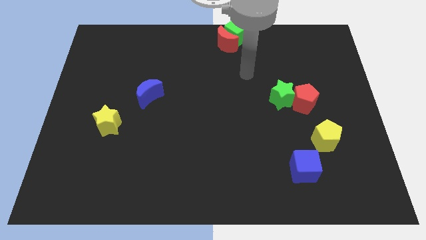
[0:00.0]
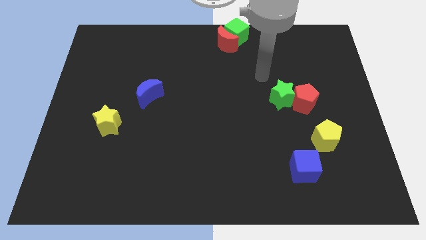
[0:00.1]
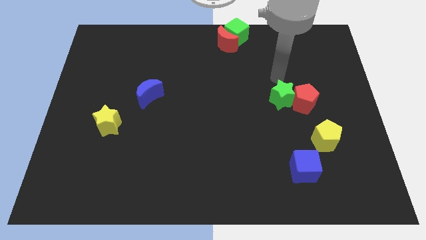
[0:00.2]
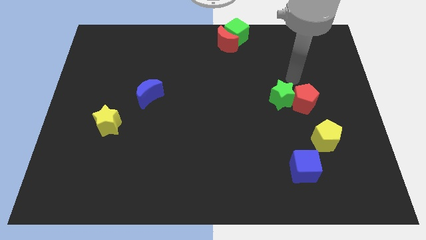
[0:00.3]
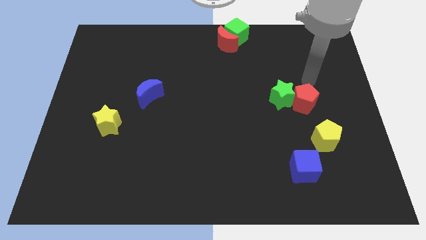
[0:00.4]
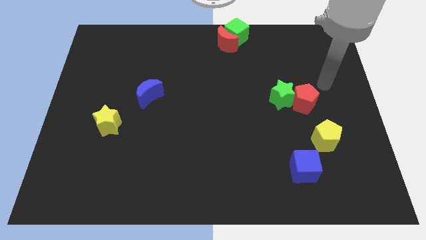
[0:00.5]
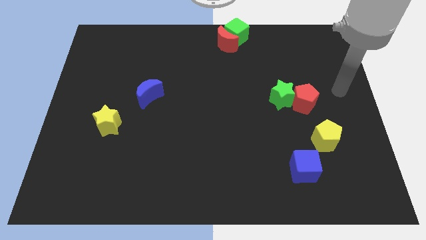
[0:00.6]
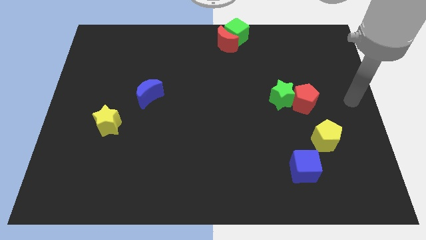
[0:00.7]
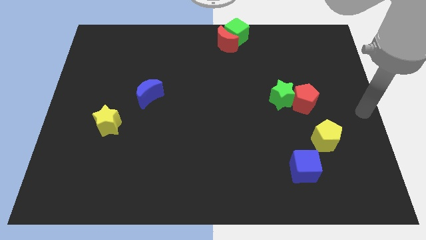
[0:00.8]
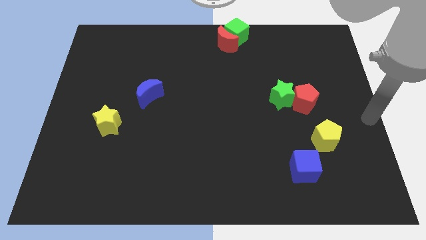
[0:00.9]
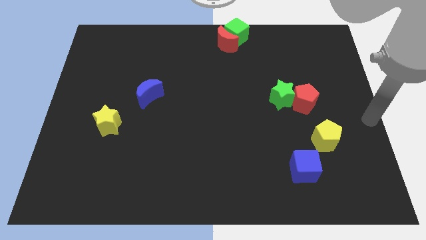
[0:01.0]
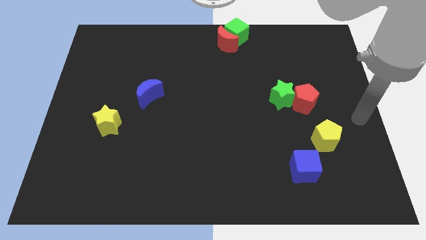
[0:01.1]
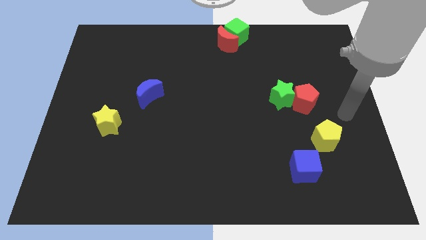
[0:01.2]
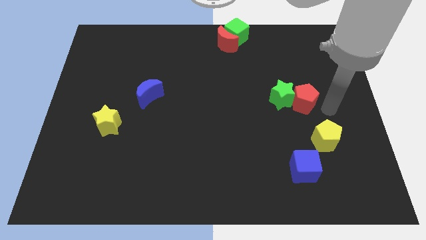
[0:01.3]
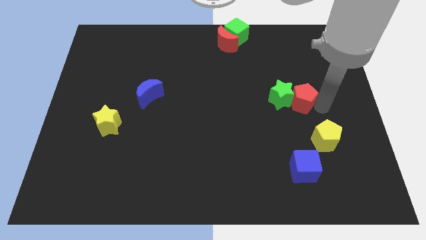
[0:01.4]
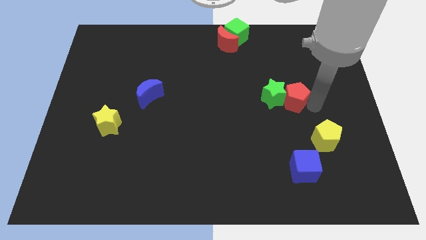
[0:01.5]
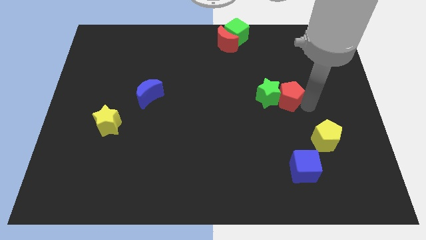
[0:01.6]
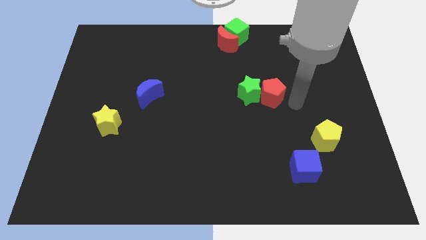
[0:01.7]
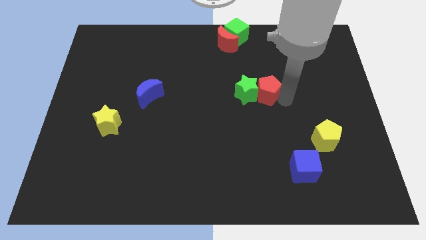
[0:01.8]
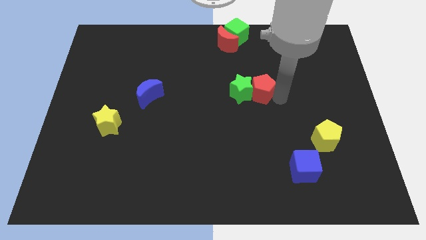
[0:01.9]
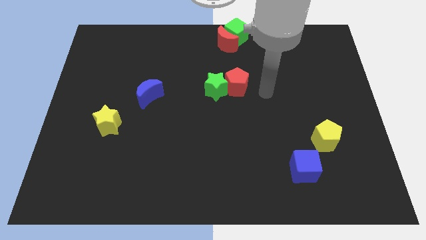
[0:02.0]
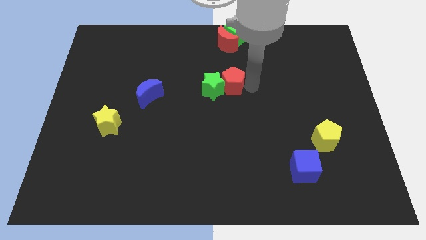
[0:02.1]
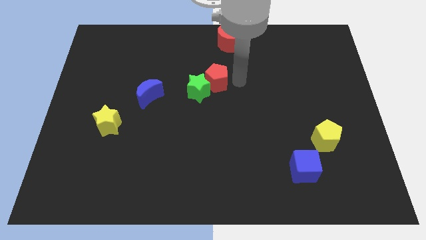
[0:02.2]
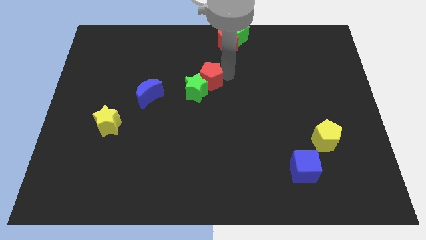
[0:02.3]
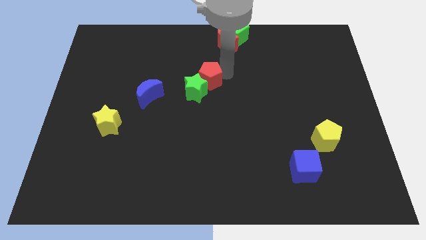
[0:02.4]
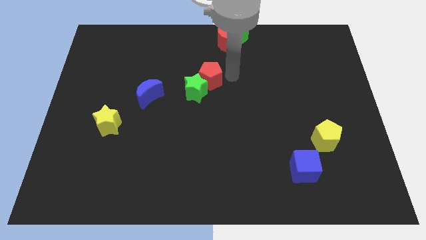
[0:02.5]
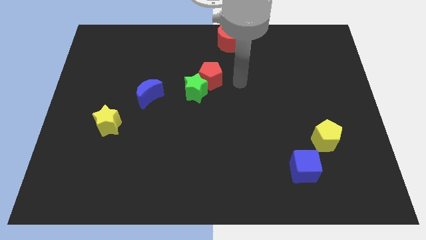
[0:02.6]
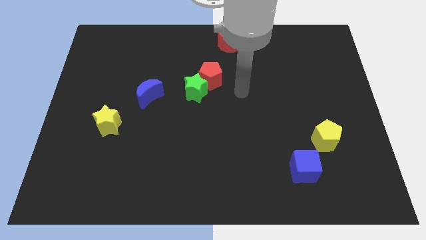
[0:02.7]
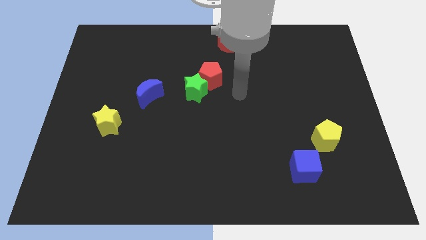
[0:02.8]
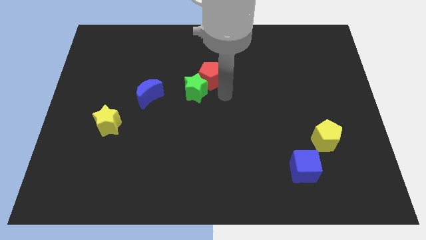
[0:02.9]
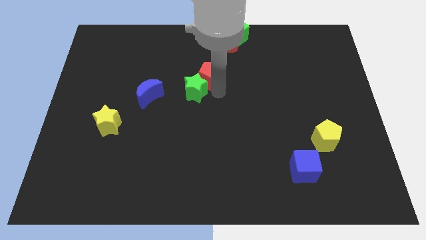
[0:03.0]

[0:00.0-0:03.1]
push green star with red pentagon near to blue crescent

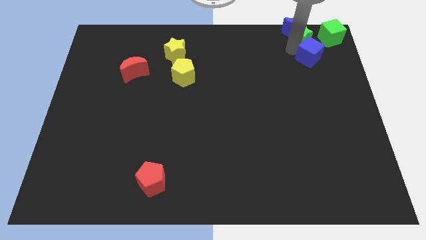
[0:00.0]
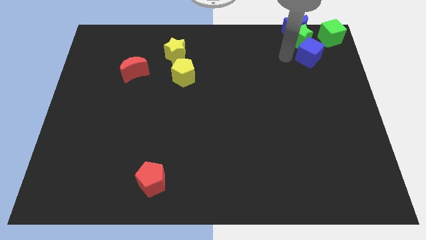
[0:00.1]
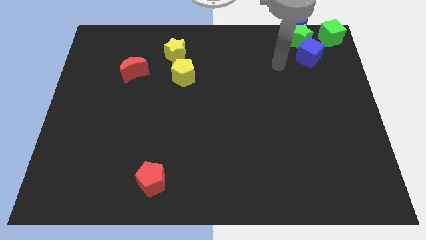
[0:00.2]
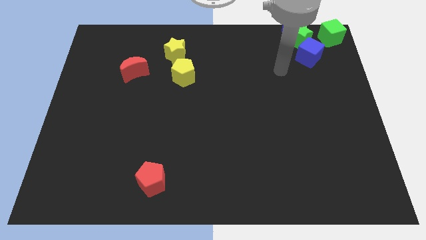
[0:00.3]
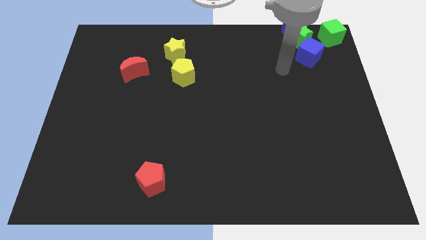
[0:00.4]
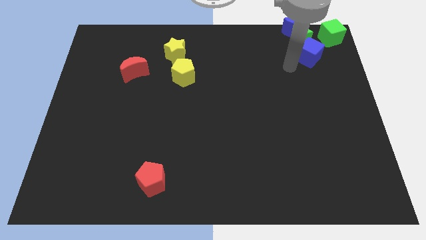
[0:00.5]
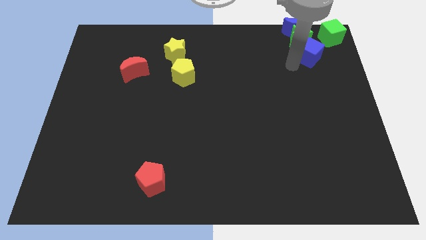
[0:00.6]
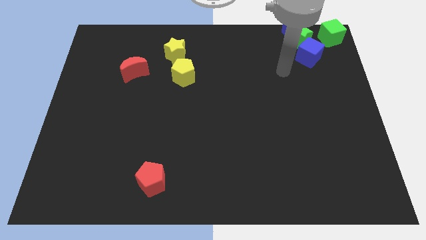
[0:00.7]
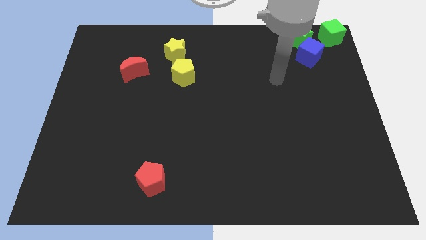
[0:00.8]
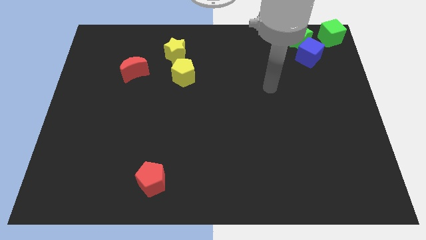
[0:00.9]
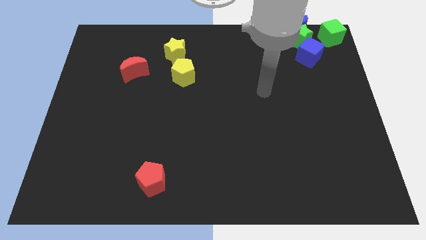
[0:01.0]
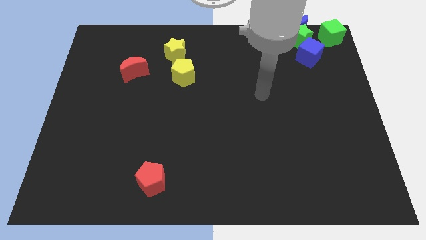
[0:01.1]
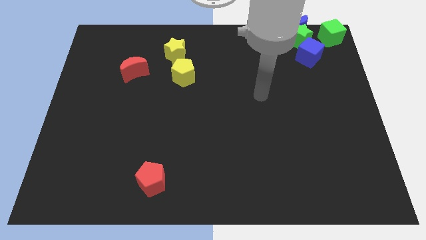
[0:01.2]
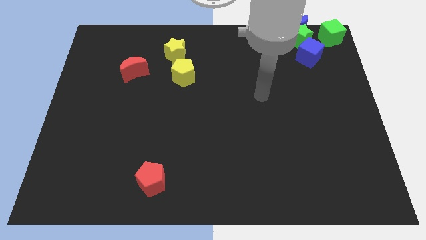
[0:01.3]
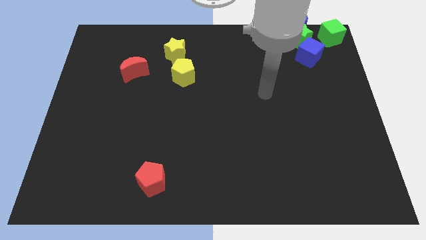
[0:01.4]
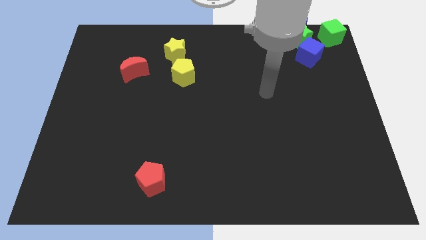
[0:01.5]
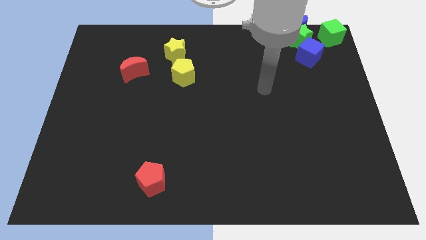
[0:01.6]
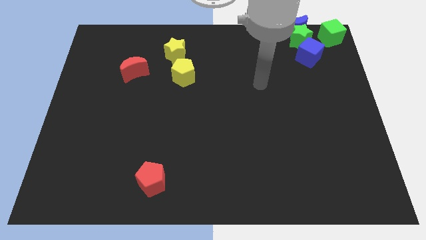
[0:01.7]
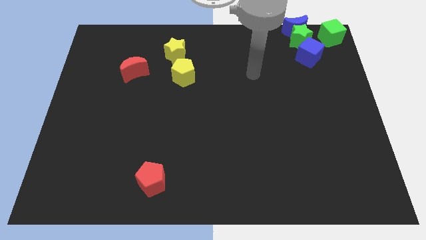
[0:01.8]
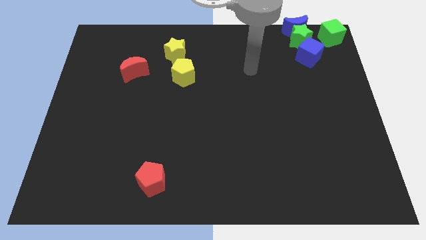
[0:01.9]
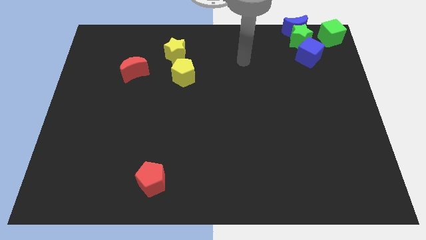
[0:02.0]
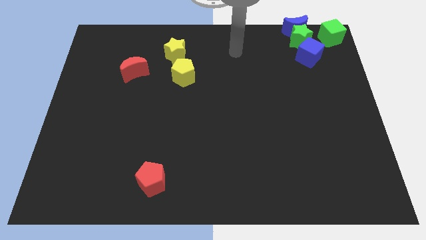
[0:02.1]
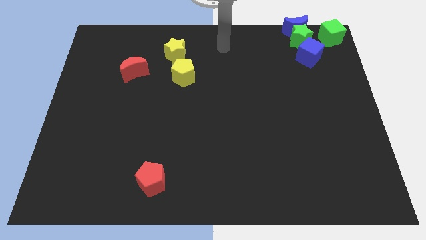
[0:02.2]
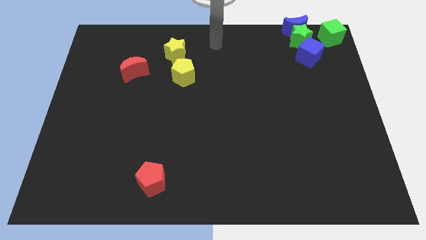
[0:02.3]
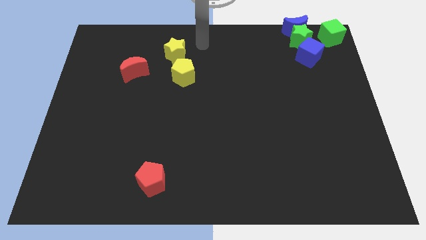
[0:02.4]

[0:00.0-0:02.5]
move your arm away from the green star

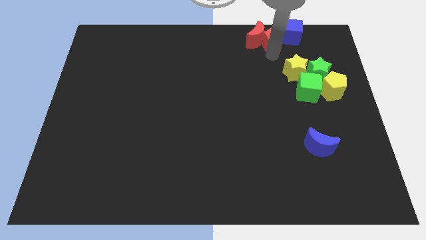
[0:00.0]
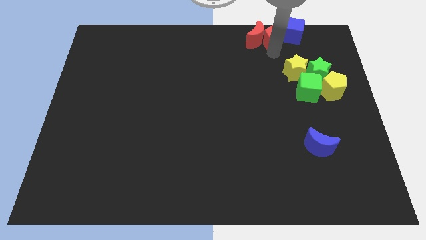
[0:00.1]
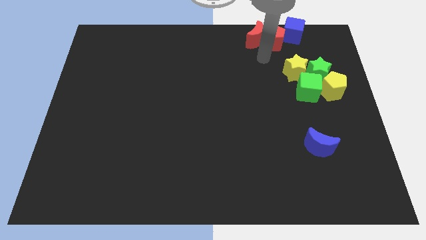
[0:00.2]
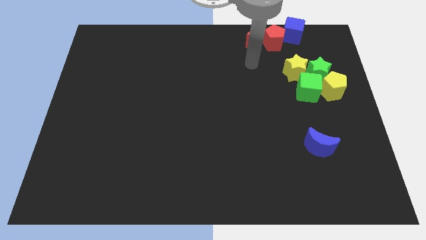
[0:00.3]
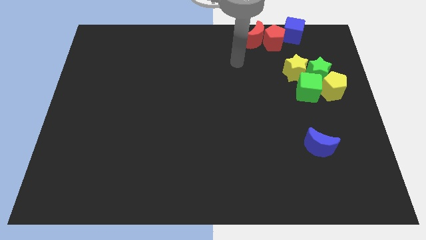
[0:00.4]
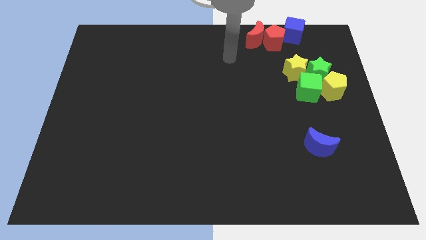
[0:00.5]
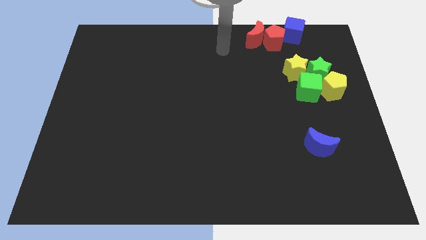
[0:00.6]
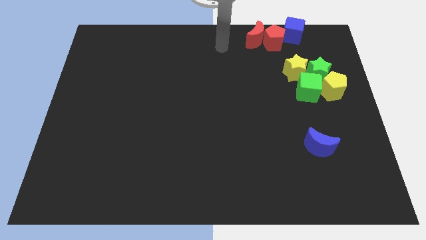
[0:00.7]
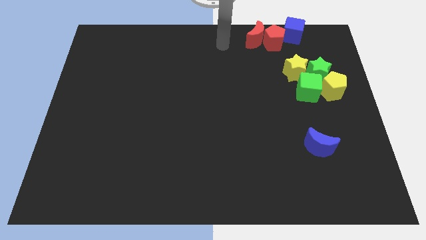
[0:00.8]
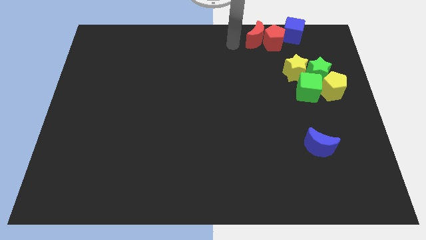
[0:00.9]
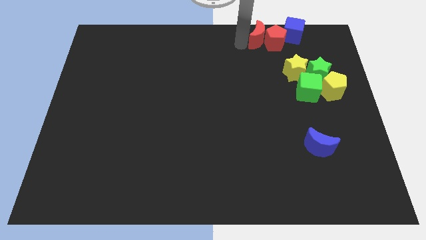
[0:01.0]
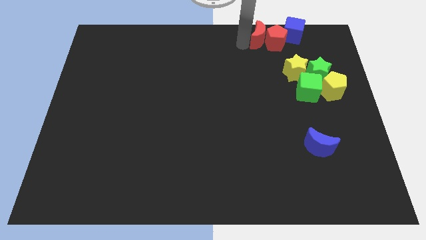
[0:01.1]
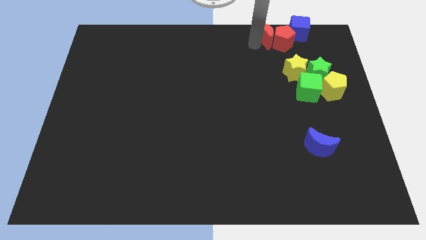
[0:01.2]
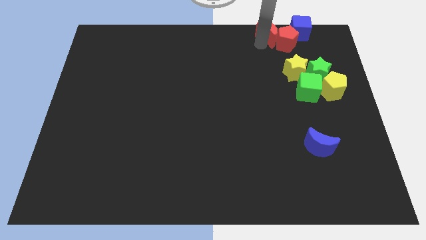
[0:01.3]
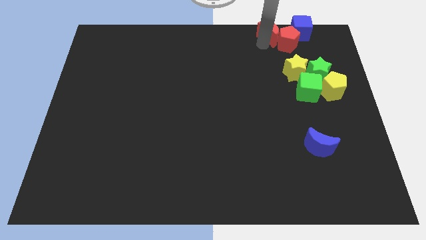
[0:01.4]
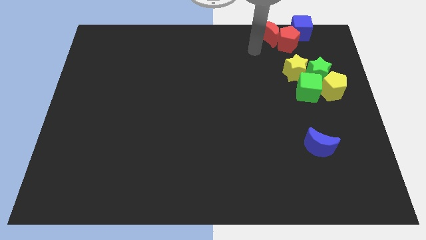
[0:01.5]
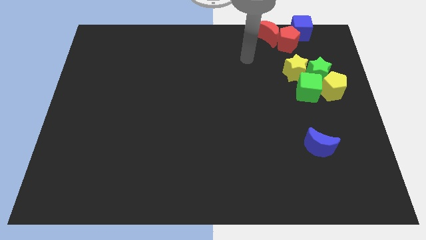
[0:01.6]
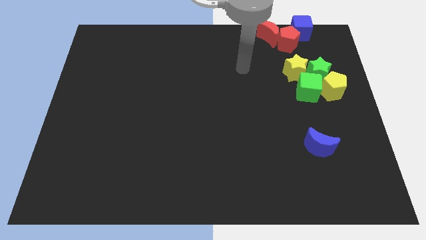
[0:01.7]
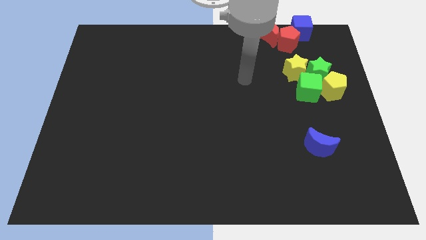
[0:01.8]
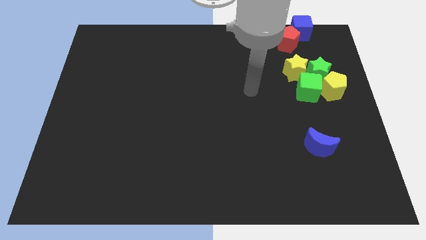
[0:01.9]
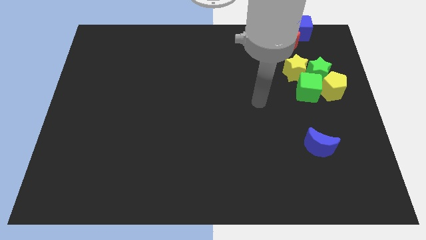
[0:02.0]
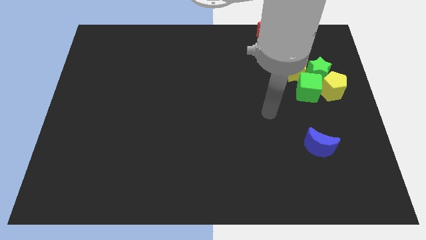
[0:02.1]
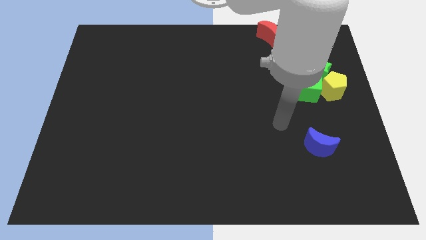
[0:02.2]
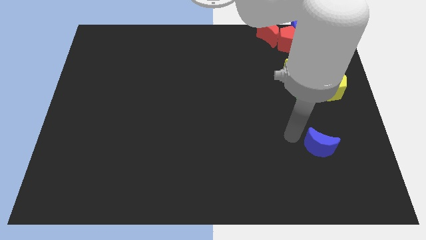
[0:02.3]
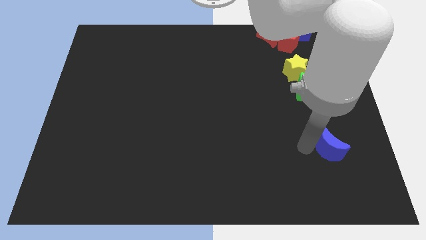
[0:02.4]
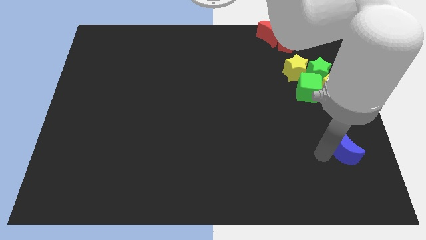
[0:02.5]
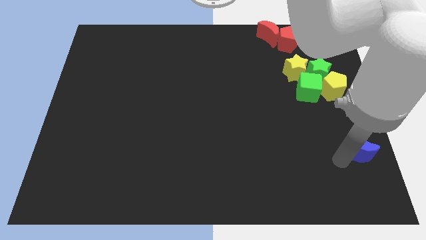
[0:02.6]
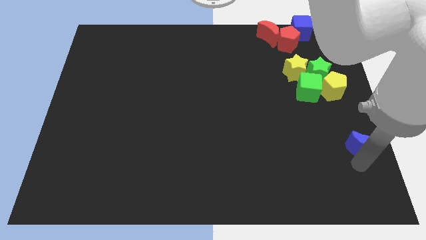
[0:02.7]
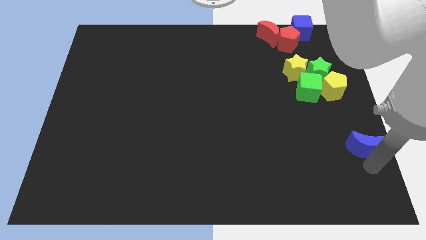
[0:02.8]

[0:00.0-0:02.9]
move your arm towards the blue crescent

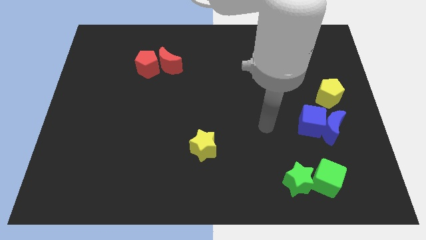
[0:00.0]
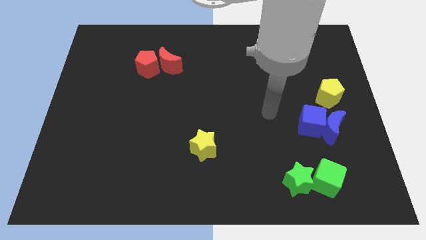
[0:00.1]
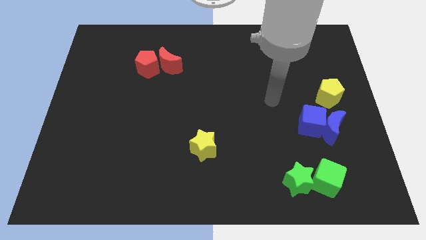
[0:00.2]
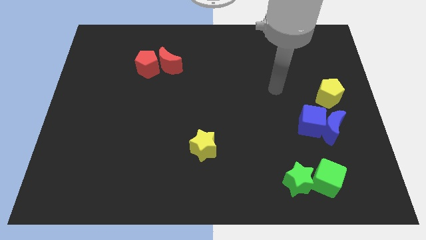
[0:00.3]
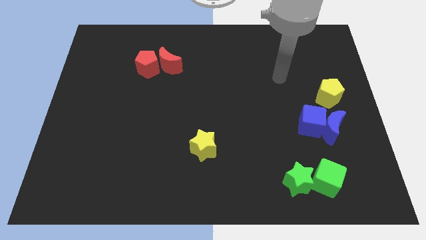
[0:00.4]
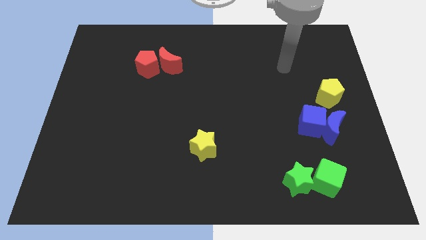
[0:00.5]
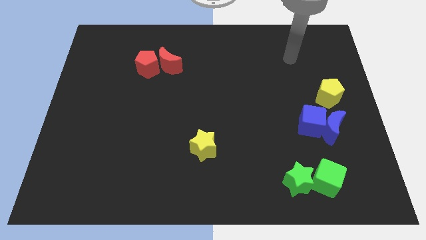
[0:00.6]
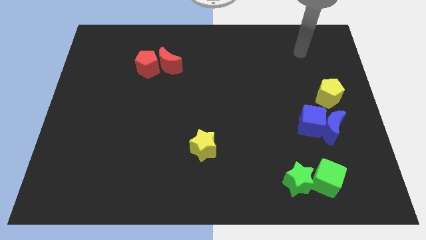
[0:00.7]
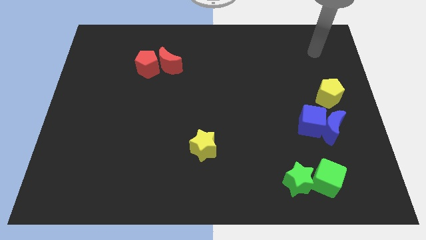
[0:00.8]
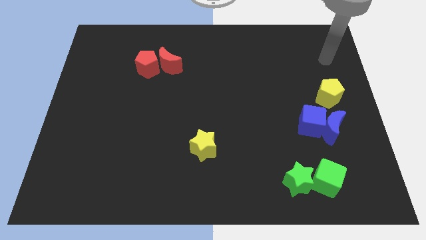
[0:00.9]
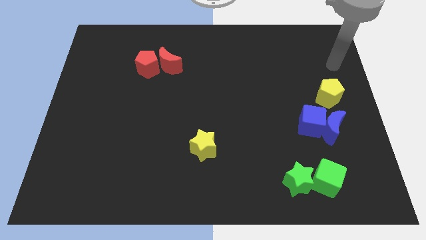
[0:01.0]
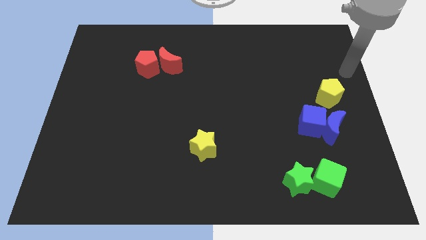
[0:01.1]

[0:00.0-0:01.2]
move the arm towards the top right of the board
